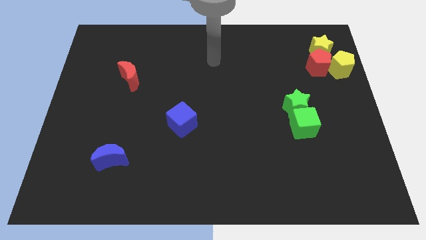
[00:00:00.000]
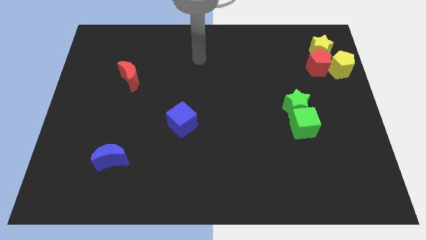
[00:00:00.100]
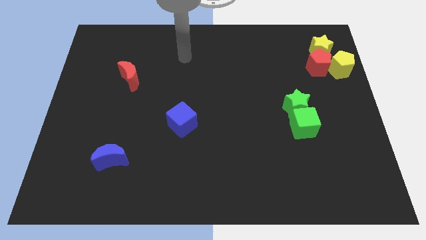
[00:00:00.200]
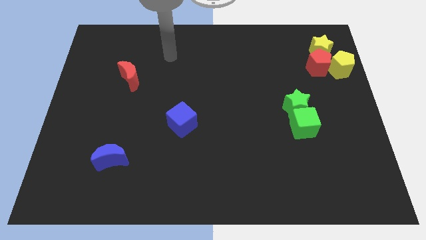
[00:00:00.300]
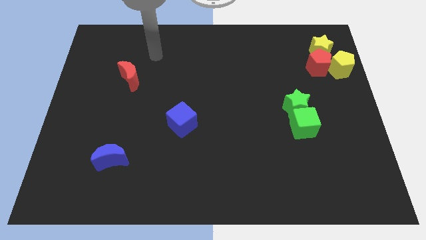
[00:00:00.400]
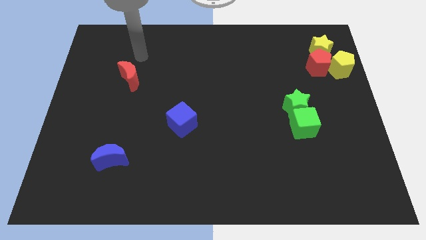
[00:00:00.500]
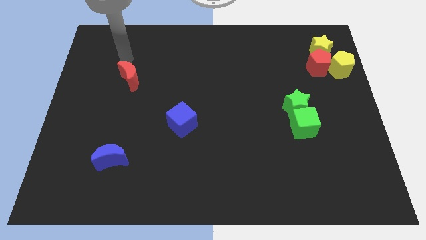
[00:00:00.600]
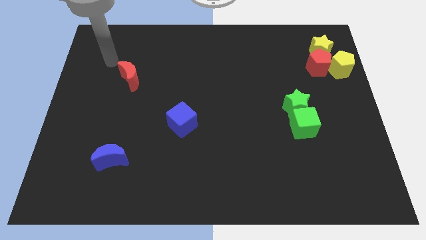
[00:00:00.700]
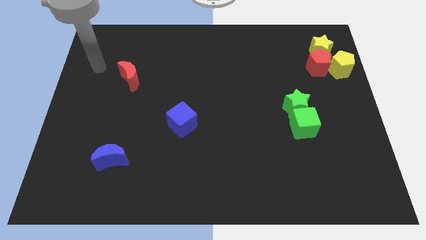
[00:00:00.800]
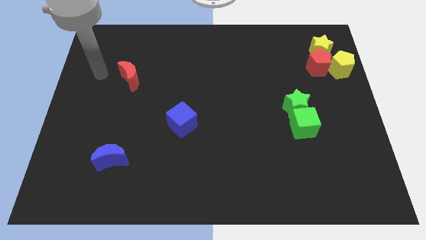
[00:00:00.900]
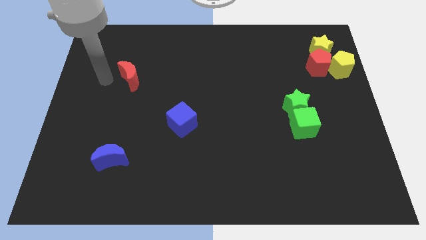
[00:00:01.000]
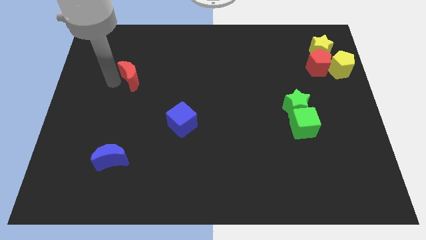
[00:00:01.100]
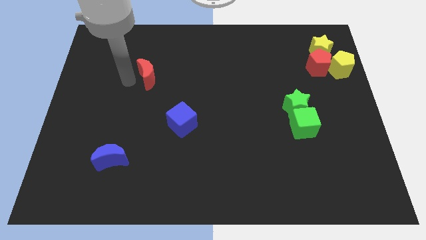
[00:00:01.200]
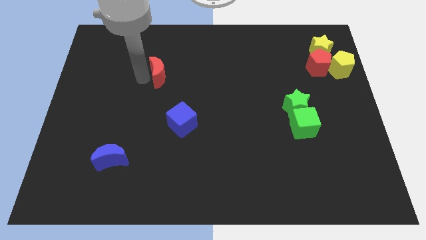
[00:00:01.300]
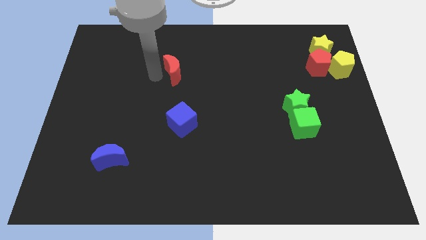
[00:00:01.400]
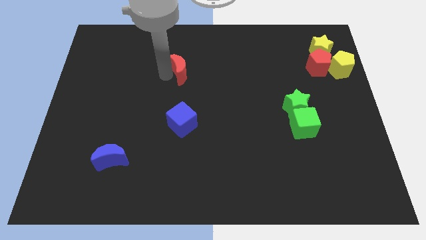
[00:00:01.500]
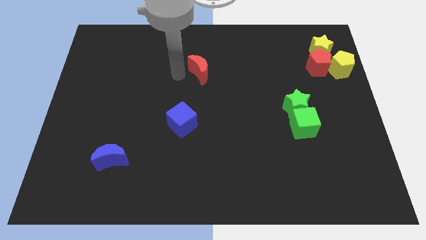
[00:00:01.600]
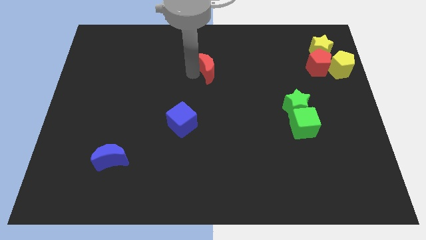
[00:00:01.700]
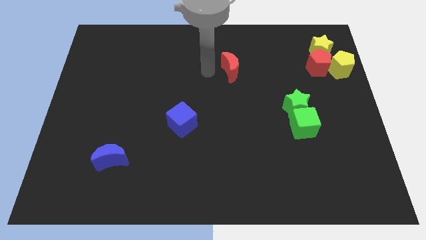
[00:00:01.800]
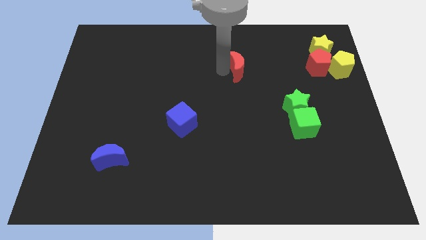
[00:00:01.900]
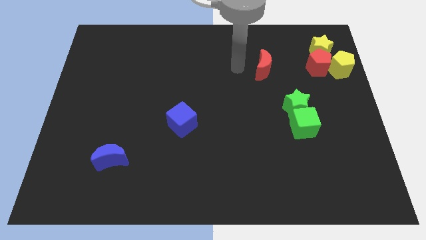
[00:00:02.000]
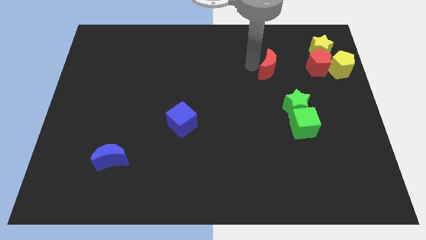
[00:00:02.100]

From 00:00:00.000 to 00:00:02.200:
move the arm to the left of the red crescent

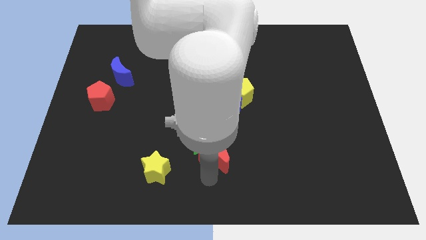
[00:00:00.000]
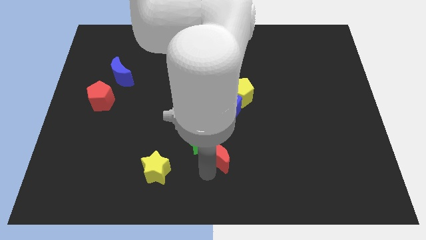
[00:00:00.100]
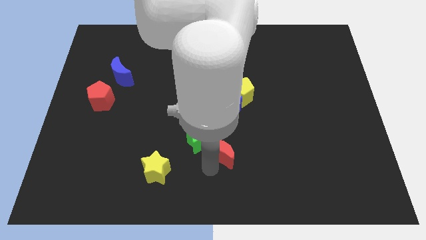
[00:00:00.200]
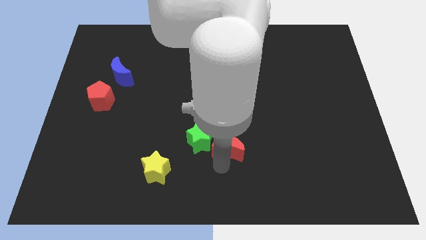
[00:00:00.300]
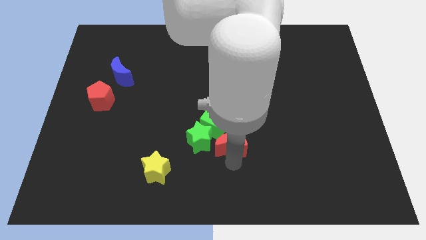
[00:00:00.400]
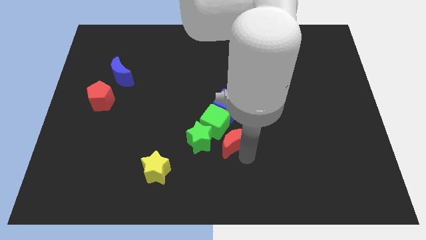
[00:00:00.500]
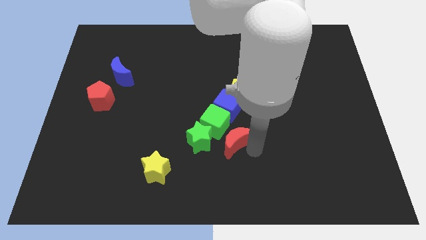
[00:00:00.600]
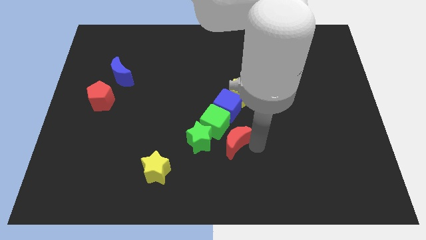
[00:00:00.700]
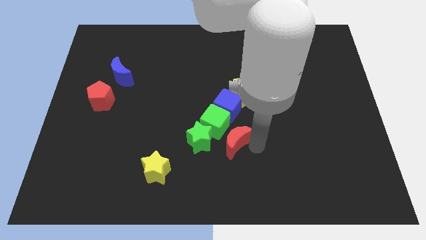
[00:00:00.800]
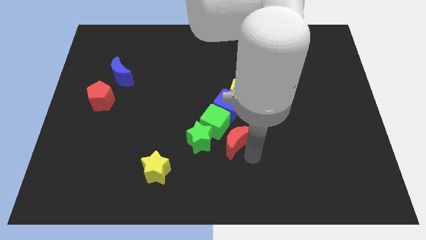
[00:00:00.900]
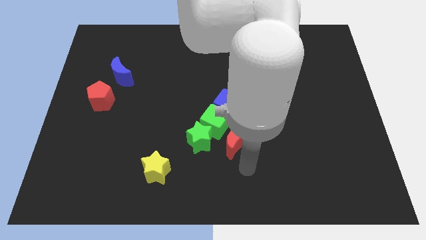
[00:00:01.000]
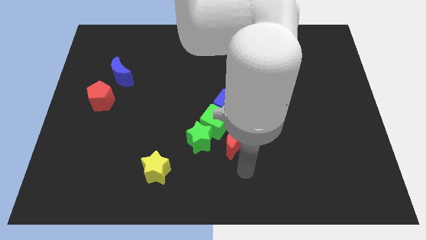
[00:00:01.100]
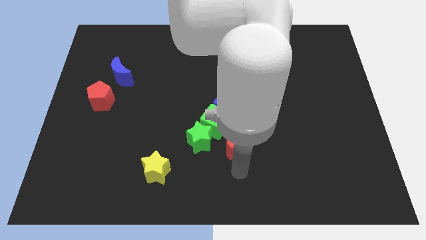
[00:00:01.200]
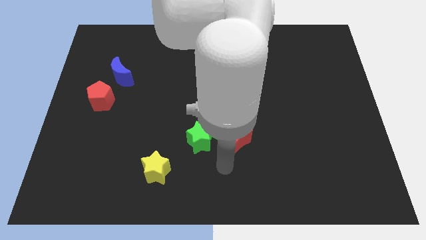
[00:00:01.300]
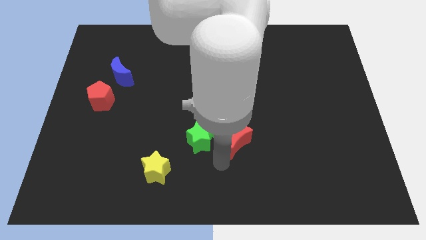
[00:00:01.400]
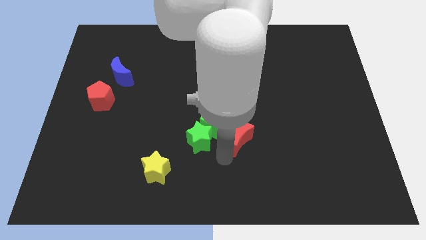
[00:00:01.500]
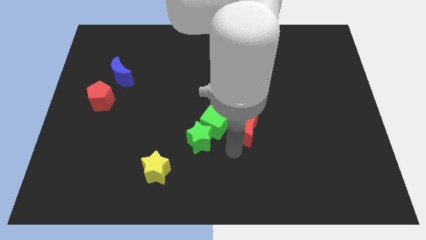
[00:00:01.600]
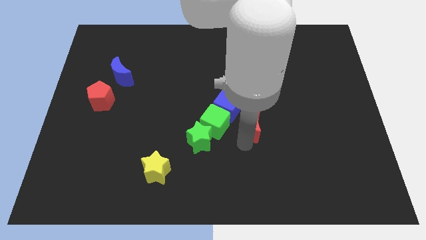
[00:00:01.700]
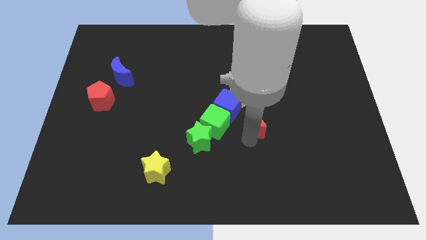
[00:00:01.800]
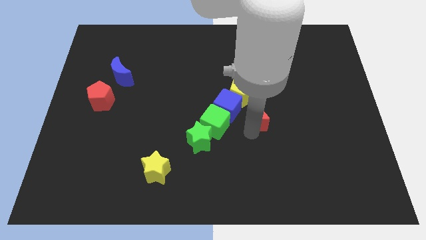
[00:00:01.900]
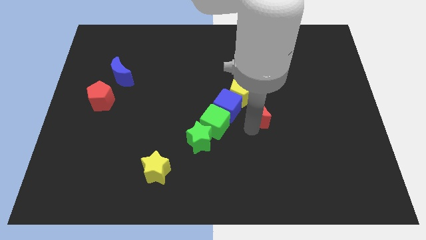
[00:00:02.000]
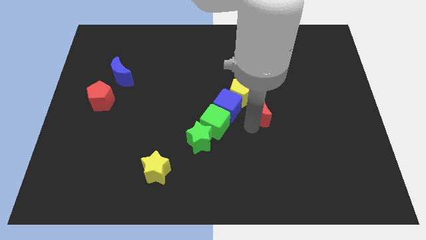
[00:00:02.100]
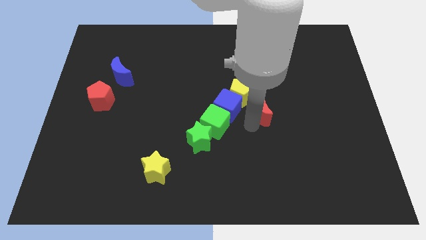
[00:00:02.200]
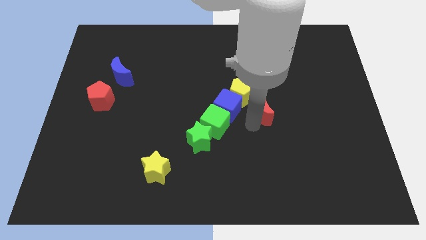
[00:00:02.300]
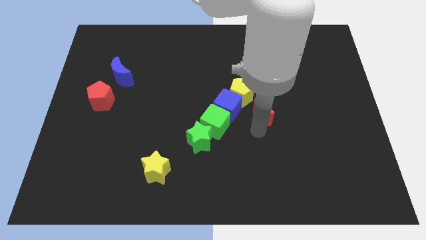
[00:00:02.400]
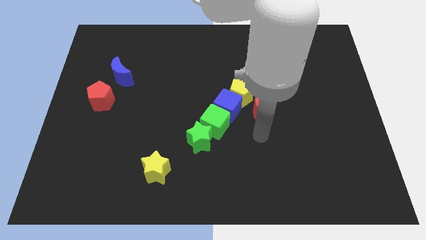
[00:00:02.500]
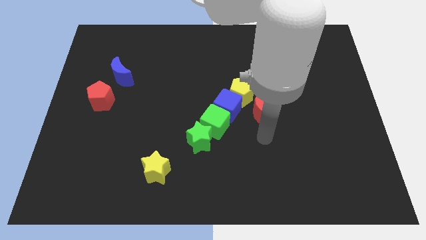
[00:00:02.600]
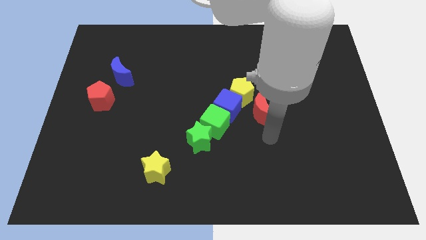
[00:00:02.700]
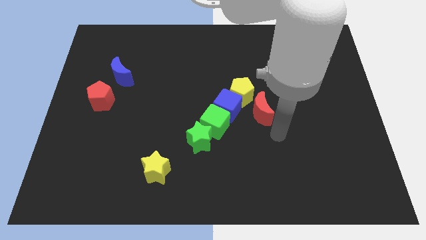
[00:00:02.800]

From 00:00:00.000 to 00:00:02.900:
move the red crescent towards the top side of the board a bit

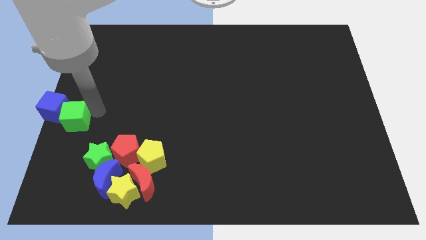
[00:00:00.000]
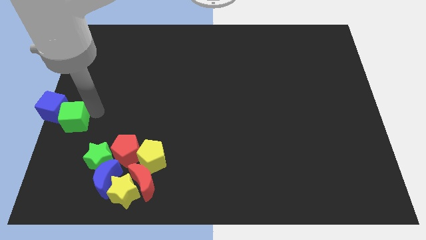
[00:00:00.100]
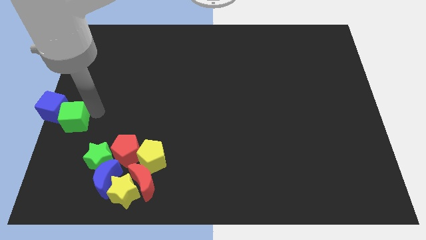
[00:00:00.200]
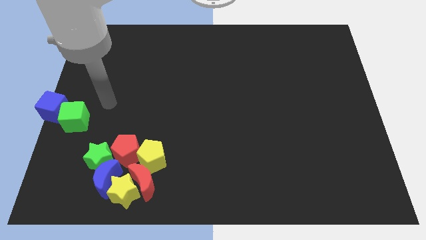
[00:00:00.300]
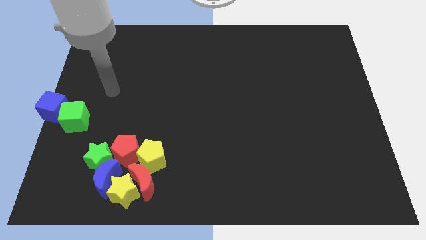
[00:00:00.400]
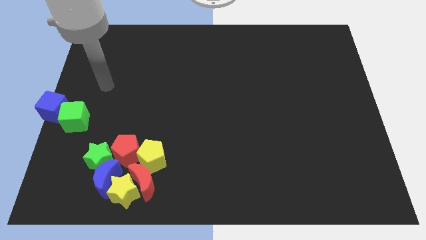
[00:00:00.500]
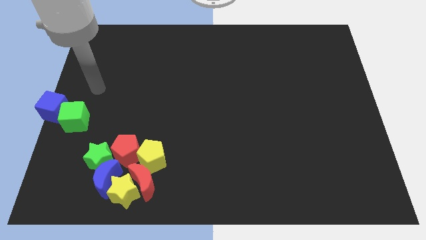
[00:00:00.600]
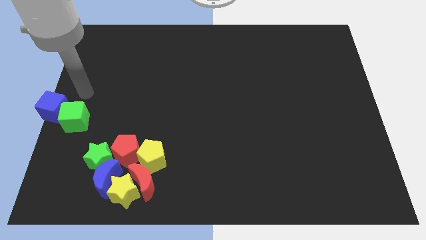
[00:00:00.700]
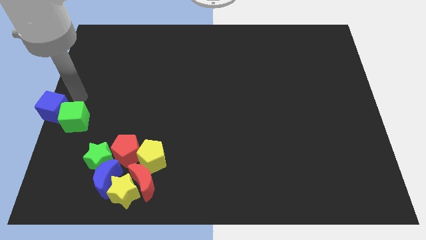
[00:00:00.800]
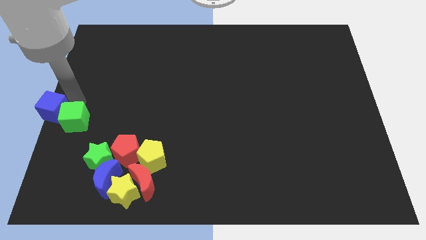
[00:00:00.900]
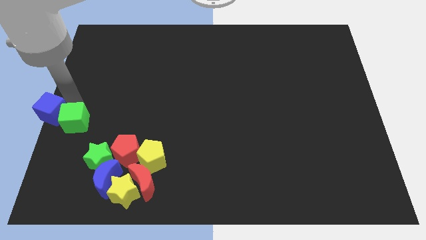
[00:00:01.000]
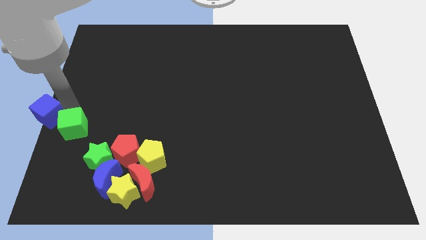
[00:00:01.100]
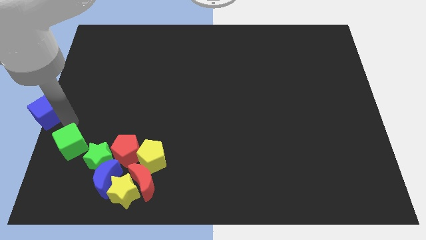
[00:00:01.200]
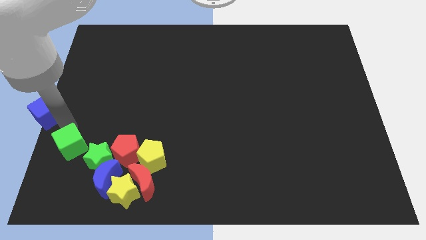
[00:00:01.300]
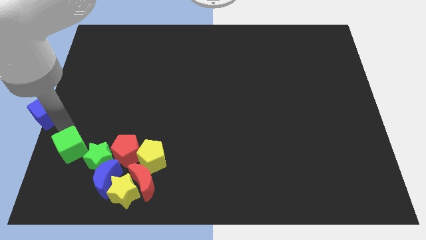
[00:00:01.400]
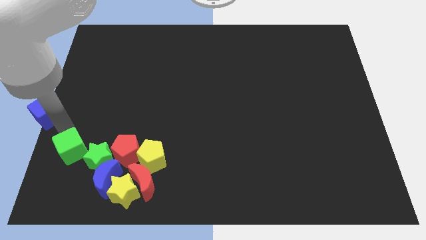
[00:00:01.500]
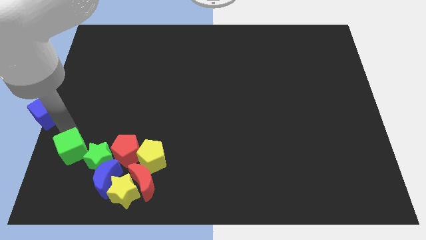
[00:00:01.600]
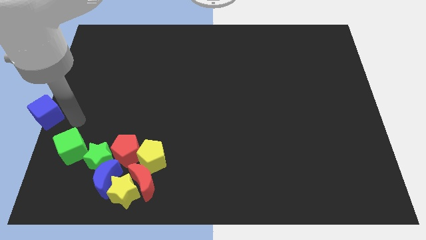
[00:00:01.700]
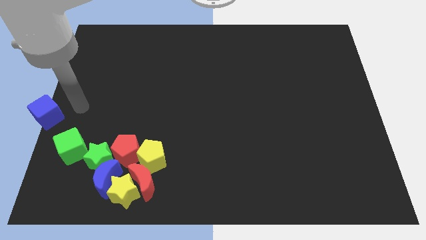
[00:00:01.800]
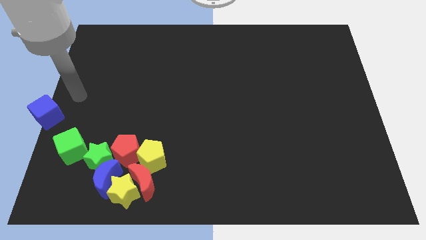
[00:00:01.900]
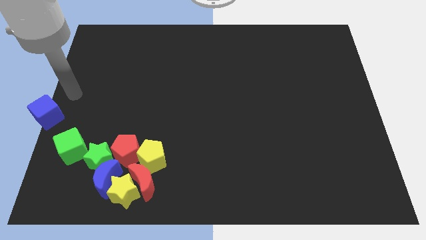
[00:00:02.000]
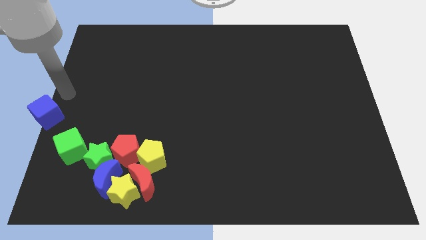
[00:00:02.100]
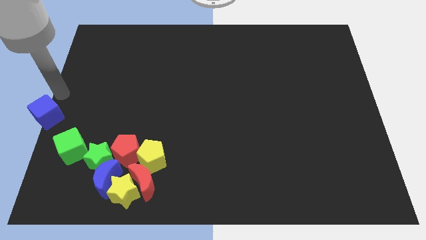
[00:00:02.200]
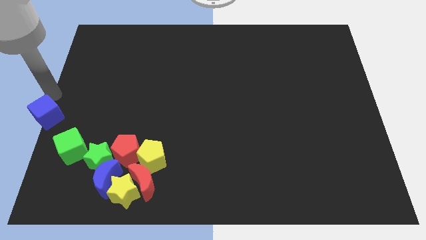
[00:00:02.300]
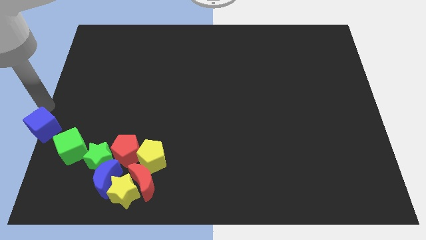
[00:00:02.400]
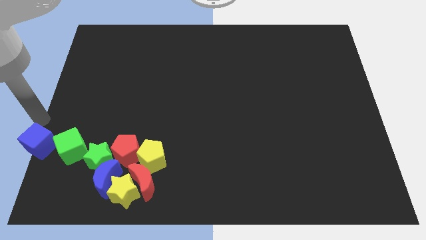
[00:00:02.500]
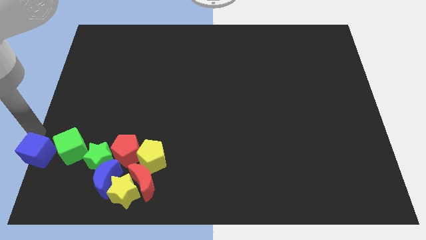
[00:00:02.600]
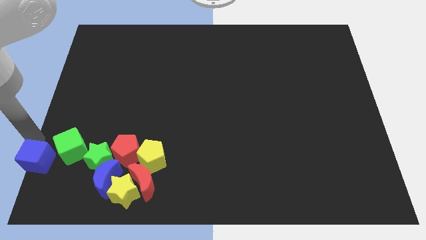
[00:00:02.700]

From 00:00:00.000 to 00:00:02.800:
place the cubes to the left side of green star

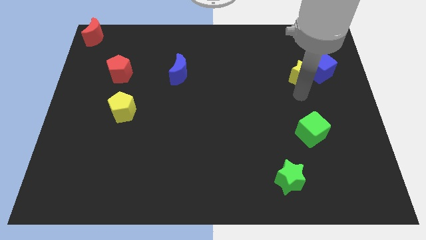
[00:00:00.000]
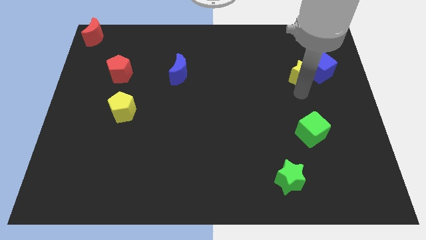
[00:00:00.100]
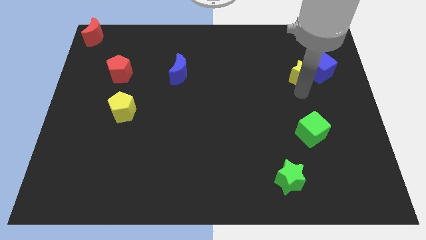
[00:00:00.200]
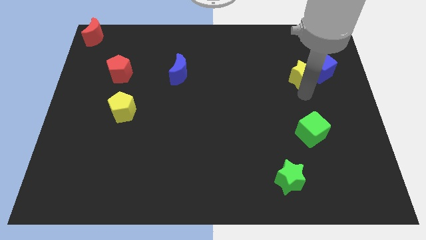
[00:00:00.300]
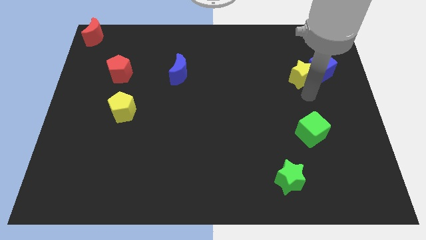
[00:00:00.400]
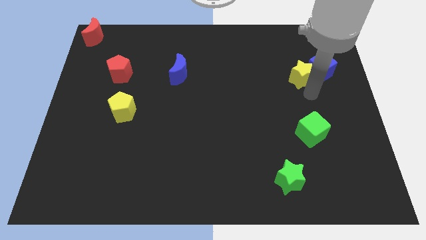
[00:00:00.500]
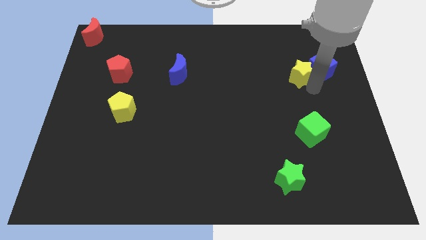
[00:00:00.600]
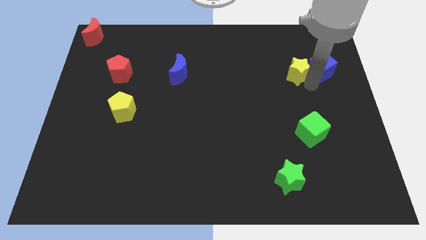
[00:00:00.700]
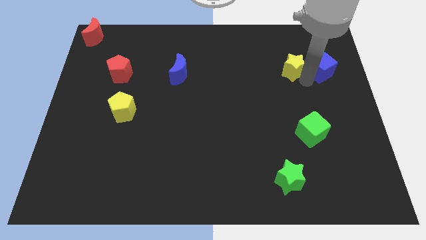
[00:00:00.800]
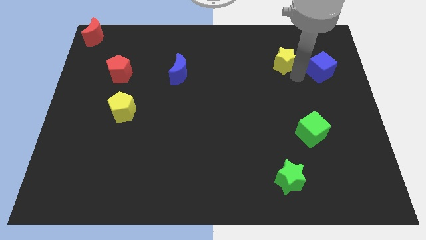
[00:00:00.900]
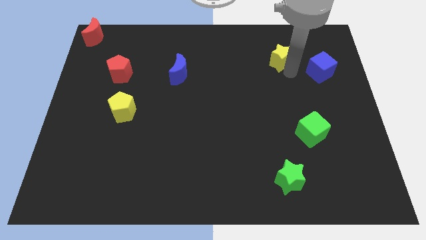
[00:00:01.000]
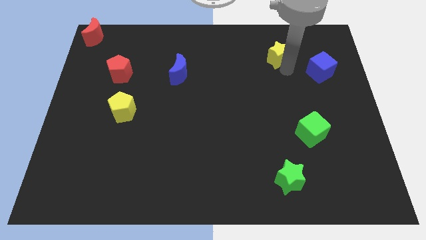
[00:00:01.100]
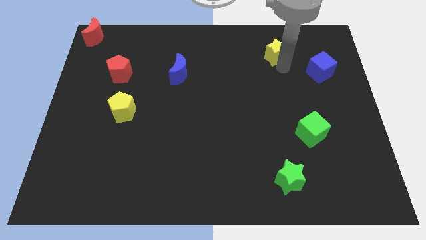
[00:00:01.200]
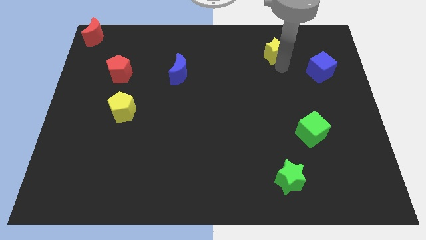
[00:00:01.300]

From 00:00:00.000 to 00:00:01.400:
separate the yellow star from blue cube
